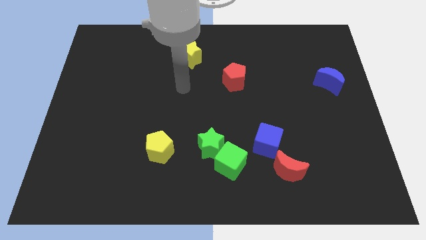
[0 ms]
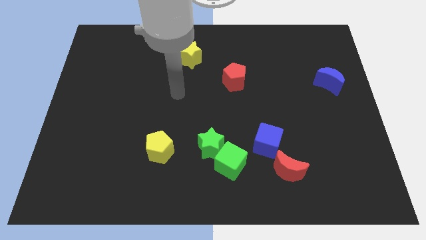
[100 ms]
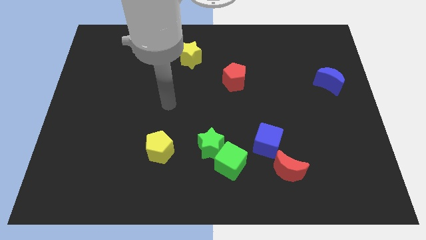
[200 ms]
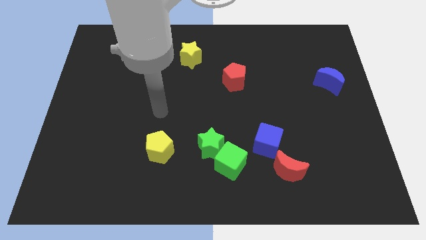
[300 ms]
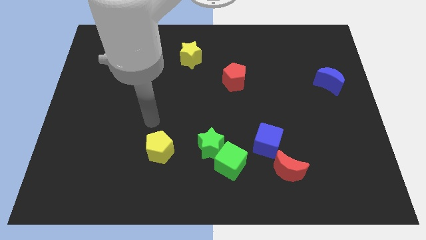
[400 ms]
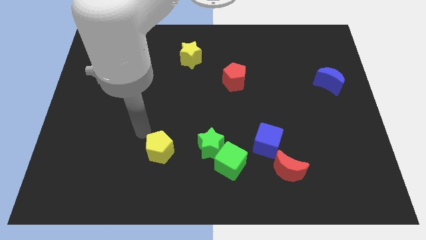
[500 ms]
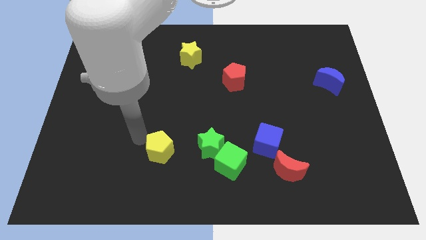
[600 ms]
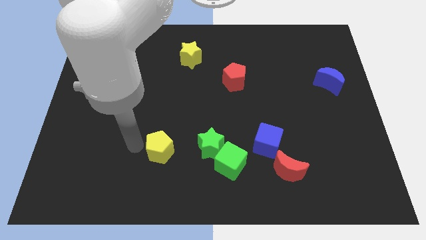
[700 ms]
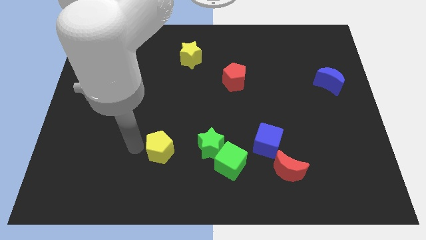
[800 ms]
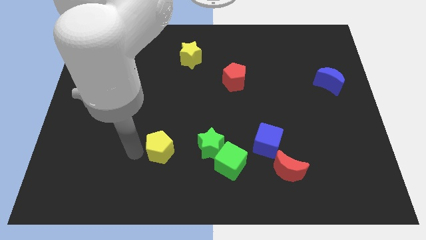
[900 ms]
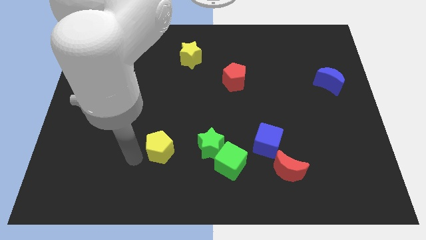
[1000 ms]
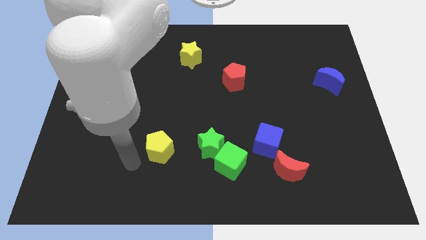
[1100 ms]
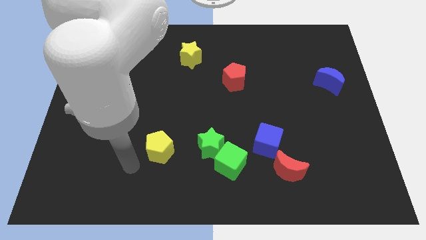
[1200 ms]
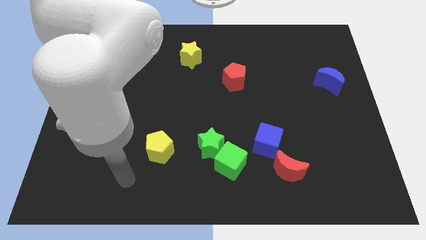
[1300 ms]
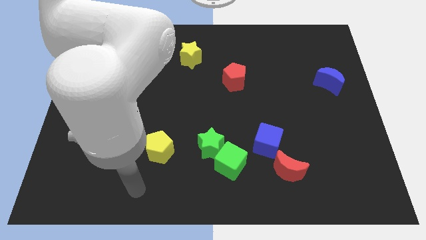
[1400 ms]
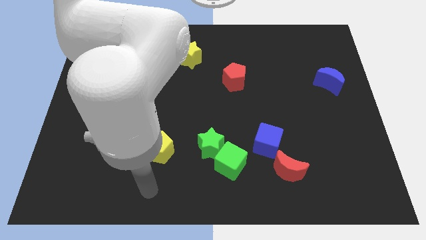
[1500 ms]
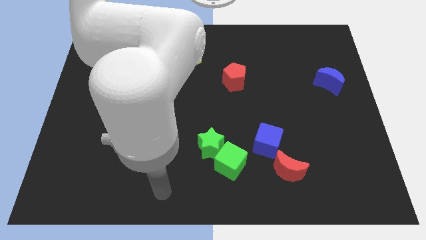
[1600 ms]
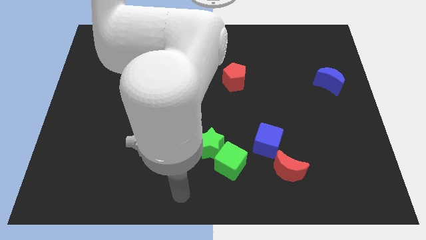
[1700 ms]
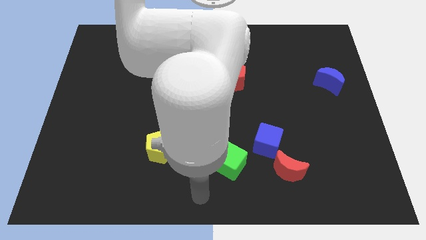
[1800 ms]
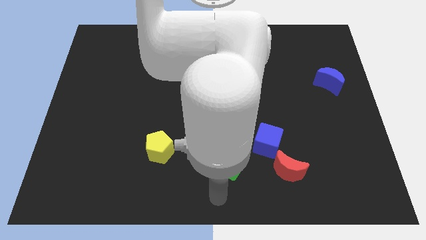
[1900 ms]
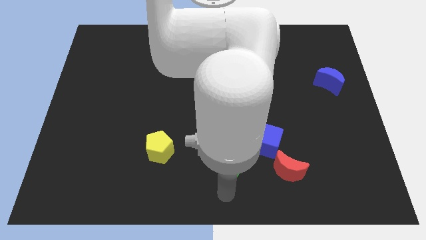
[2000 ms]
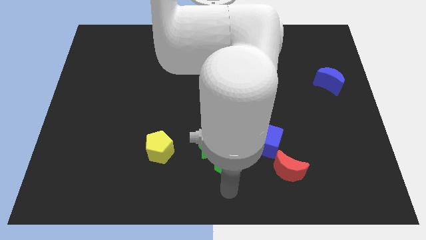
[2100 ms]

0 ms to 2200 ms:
move the arm towards the green cube

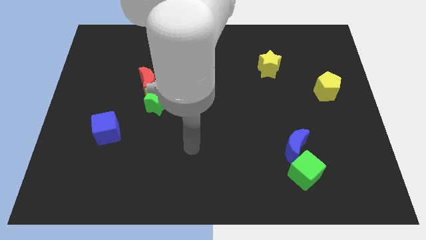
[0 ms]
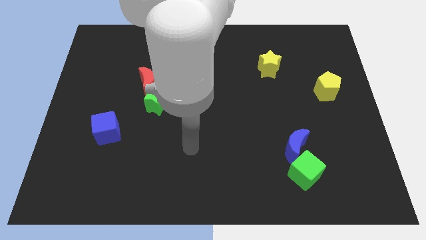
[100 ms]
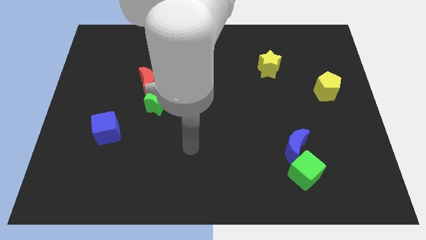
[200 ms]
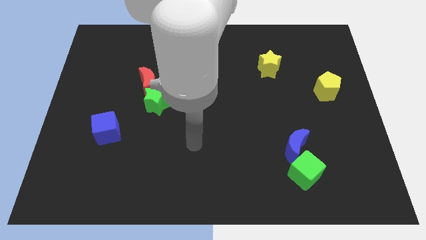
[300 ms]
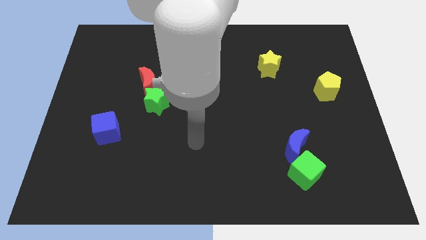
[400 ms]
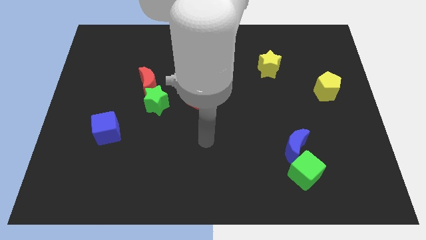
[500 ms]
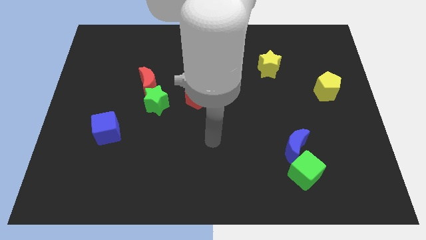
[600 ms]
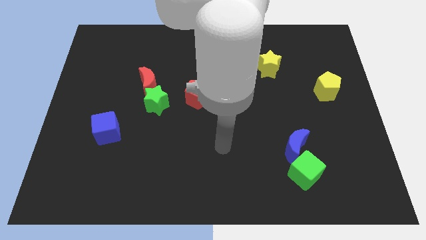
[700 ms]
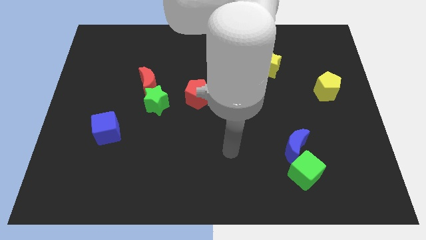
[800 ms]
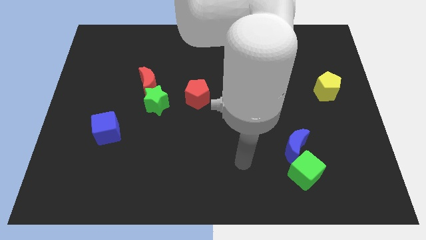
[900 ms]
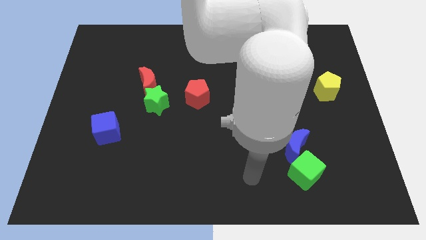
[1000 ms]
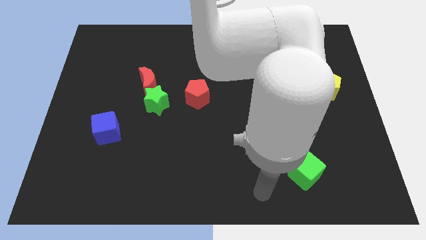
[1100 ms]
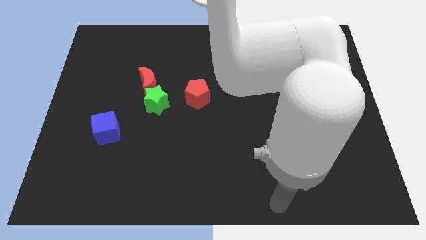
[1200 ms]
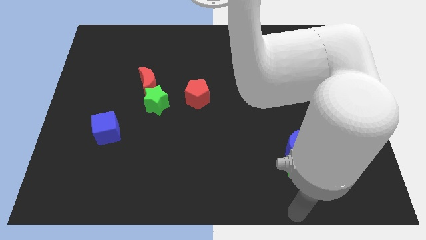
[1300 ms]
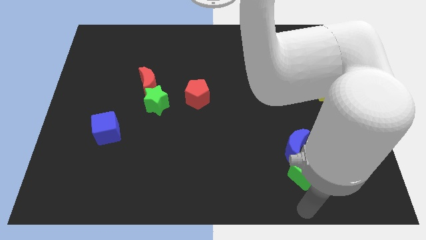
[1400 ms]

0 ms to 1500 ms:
put your arm at the bottom of green cube

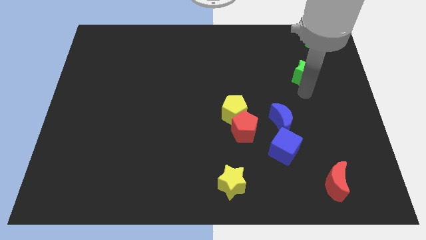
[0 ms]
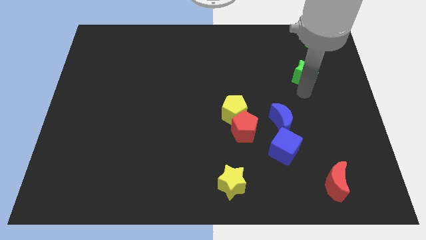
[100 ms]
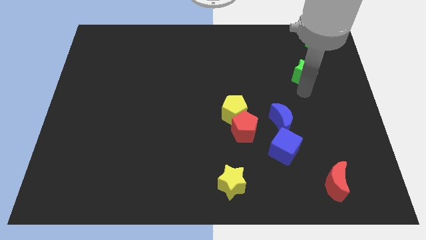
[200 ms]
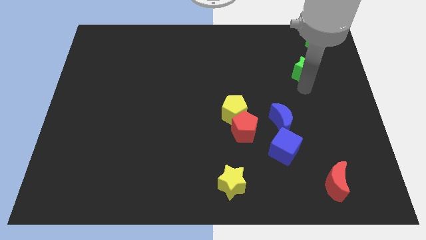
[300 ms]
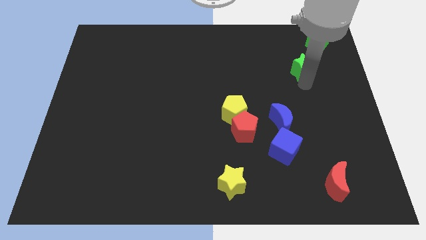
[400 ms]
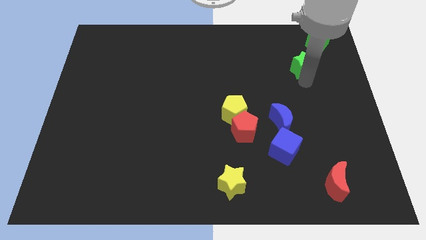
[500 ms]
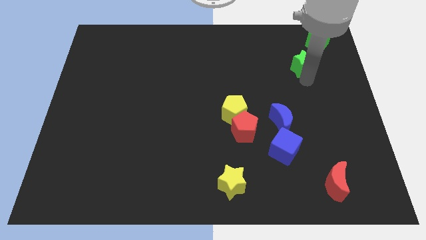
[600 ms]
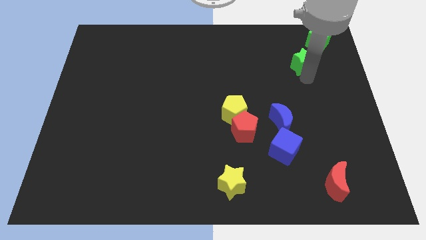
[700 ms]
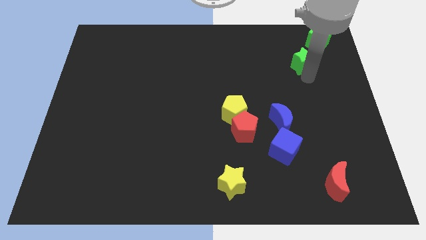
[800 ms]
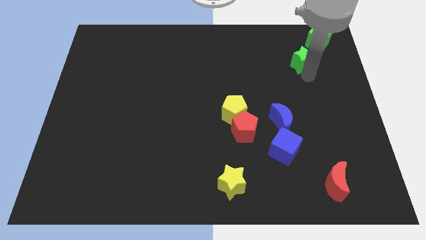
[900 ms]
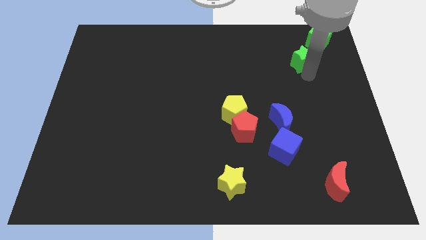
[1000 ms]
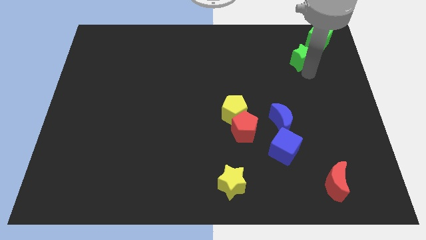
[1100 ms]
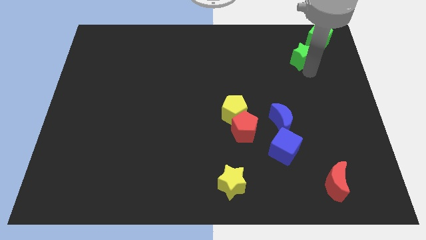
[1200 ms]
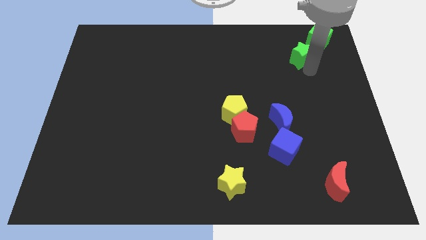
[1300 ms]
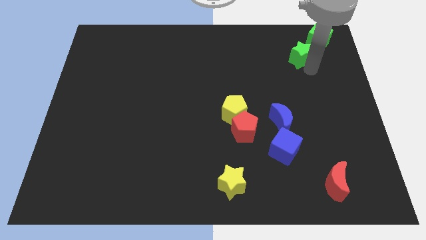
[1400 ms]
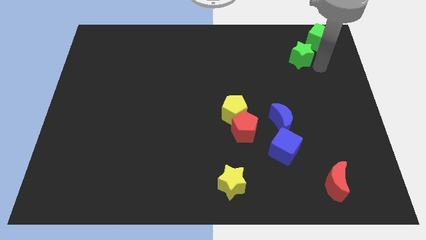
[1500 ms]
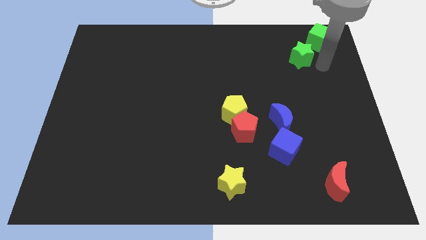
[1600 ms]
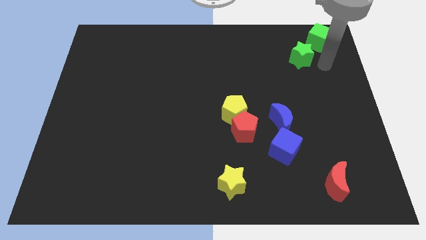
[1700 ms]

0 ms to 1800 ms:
move the green star close to the green cube

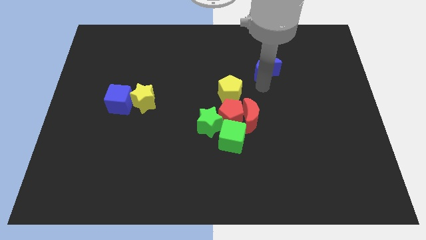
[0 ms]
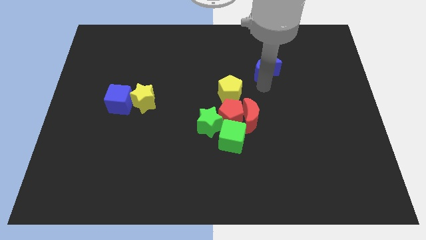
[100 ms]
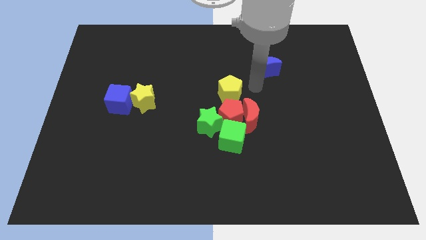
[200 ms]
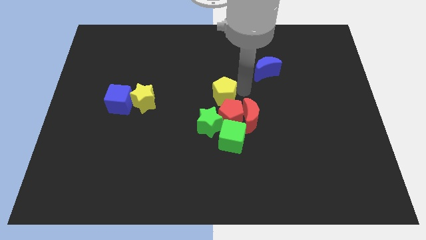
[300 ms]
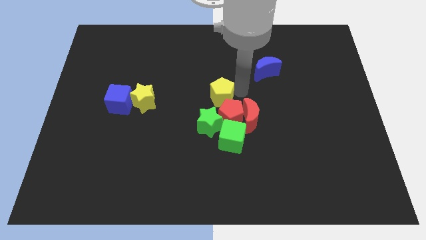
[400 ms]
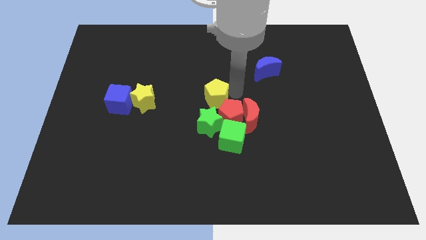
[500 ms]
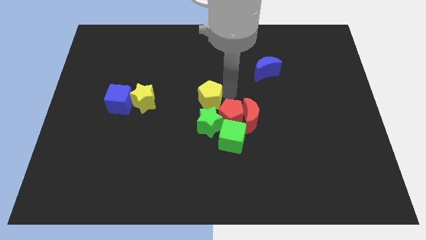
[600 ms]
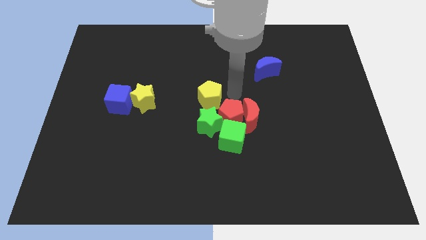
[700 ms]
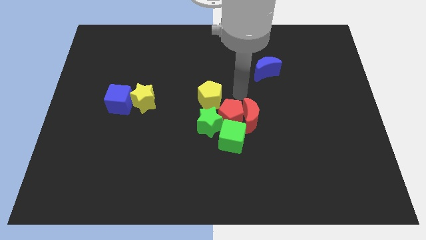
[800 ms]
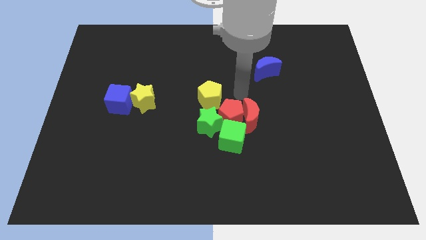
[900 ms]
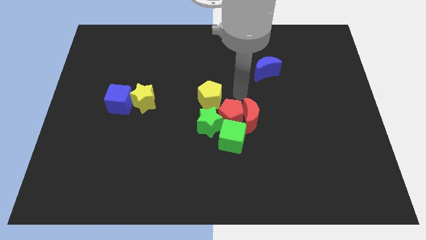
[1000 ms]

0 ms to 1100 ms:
slide yellow pentagon on top of green star

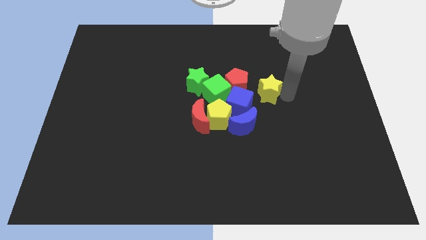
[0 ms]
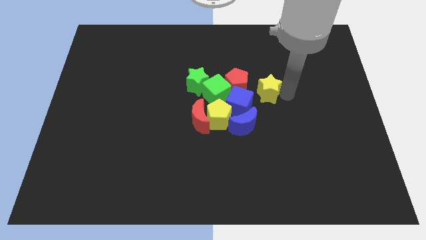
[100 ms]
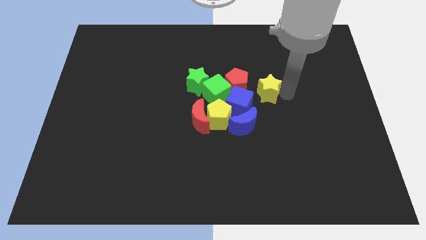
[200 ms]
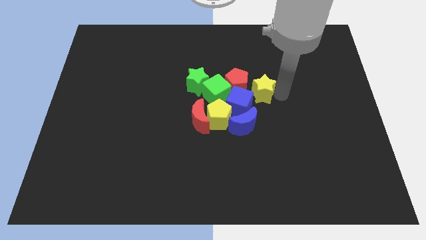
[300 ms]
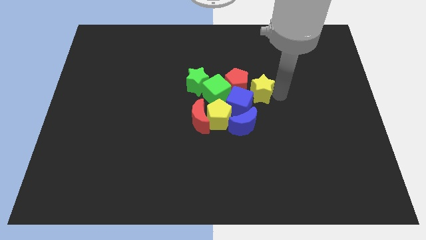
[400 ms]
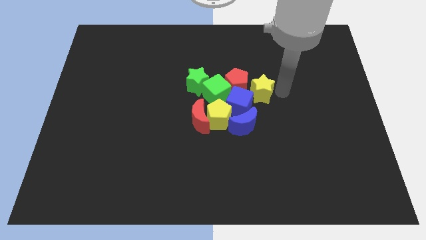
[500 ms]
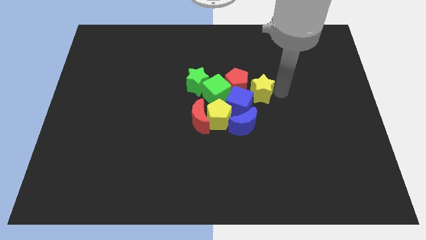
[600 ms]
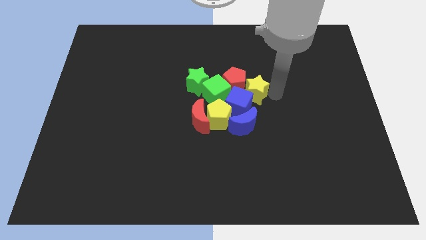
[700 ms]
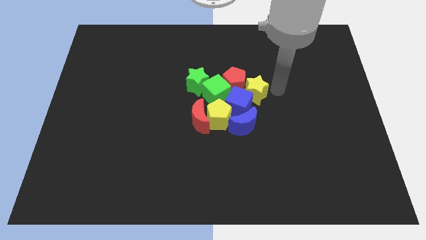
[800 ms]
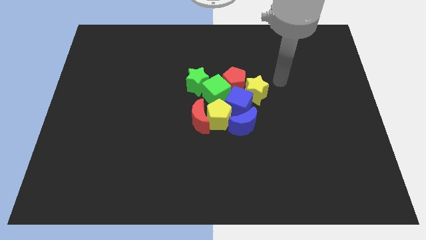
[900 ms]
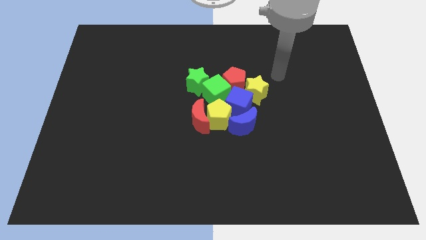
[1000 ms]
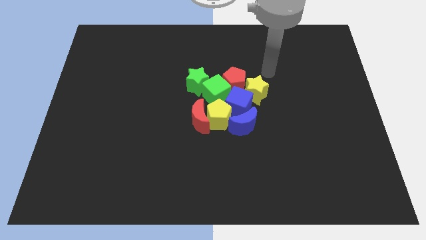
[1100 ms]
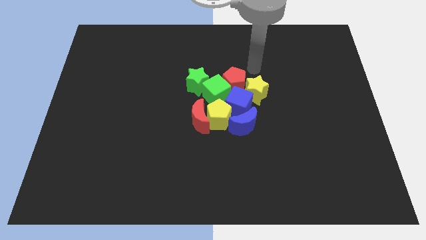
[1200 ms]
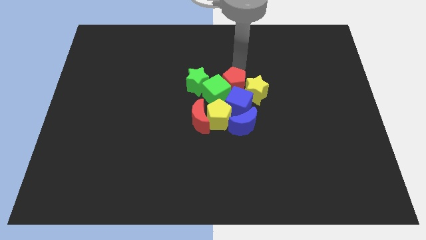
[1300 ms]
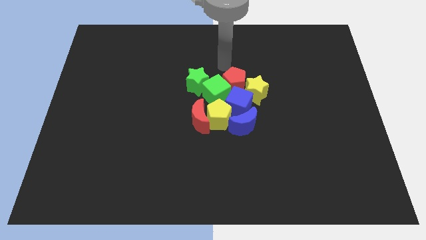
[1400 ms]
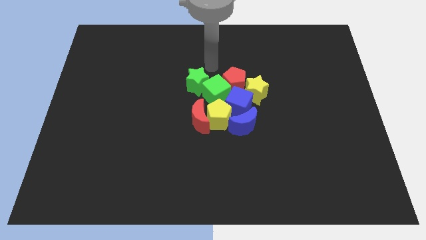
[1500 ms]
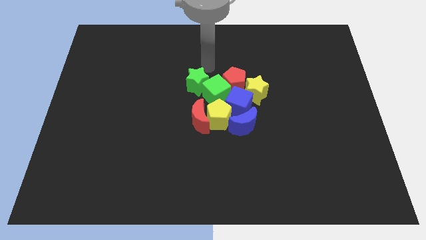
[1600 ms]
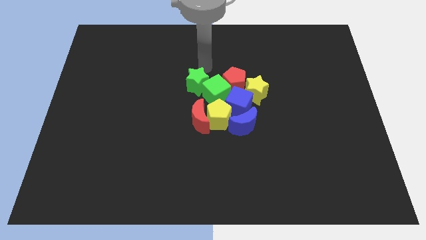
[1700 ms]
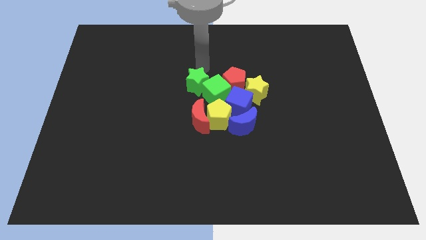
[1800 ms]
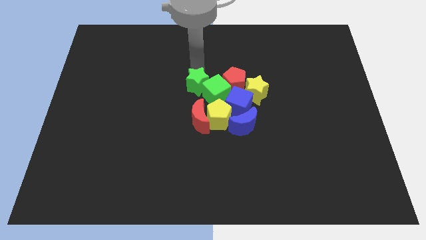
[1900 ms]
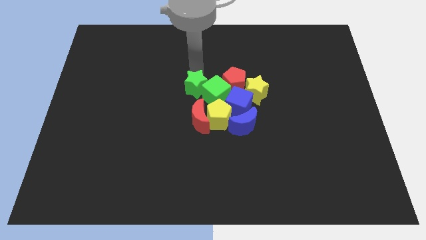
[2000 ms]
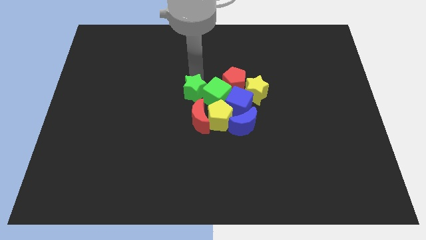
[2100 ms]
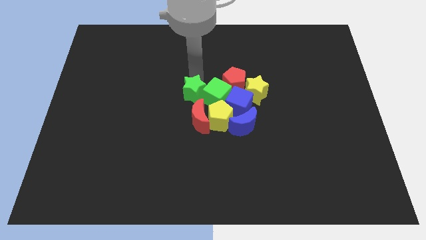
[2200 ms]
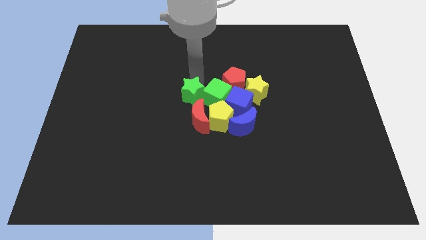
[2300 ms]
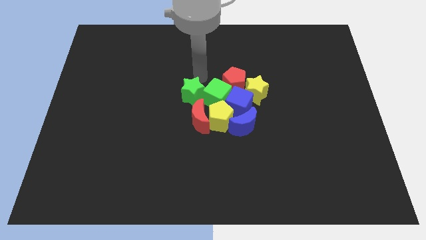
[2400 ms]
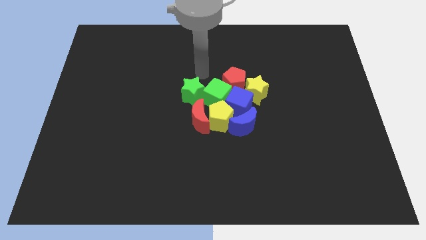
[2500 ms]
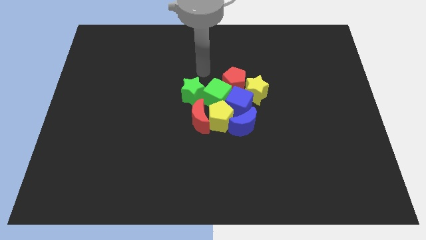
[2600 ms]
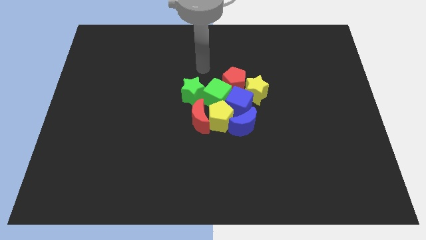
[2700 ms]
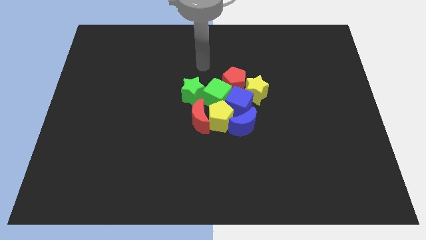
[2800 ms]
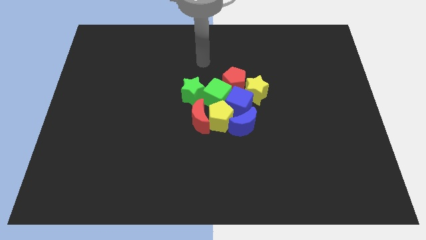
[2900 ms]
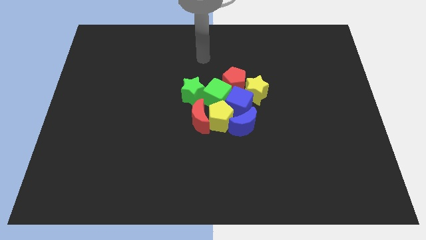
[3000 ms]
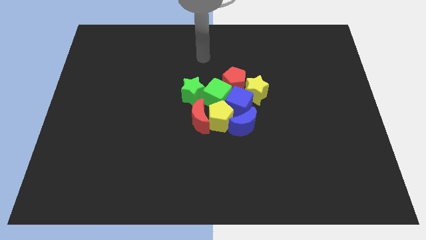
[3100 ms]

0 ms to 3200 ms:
make all the blocks to a group
